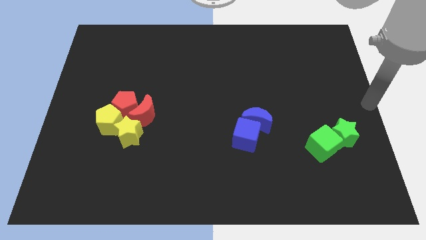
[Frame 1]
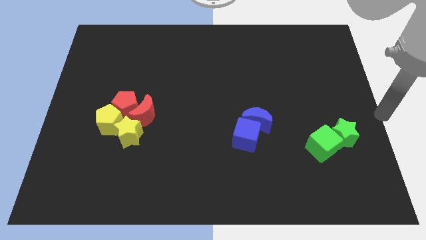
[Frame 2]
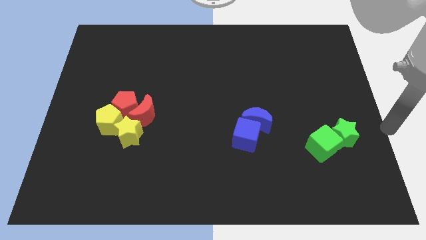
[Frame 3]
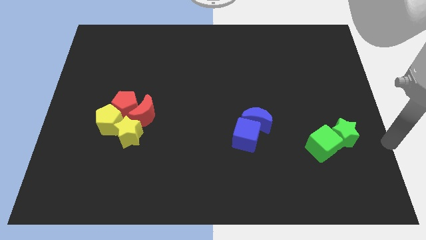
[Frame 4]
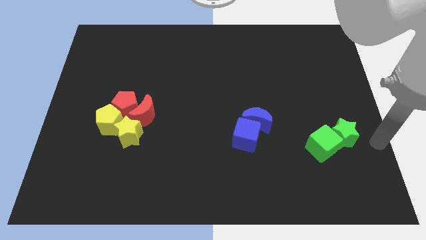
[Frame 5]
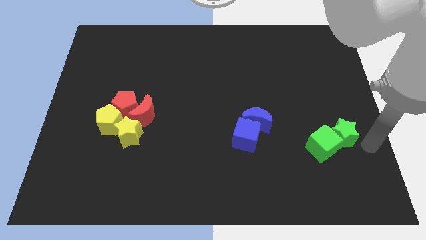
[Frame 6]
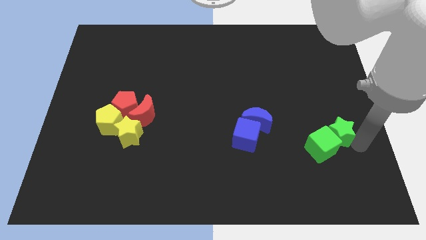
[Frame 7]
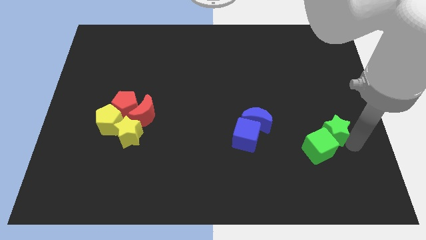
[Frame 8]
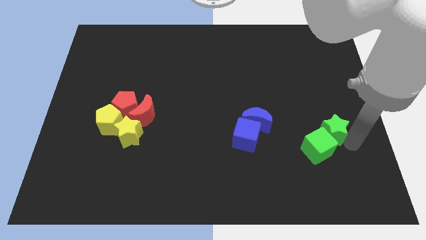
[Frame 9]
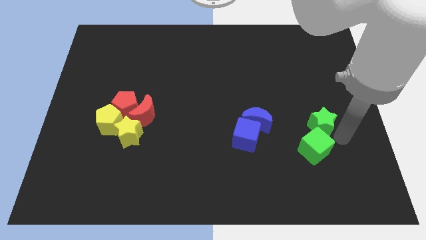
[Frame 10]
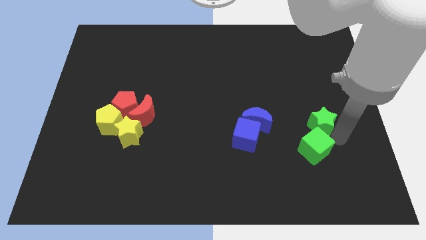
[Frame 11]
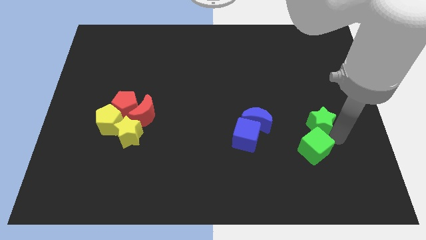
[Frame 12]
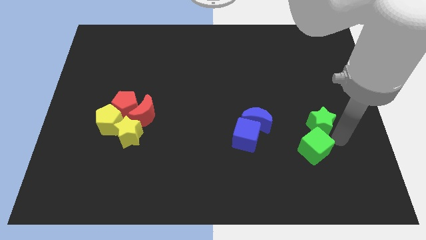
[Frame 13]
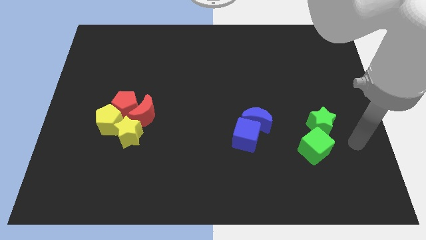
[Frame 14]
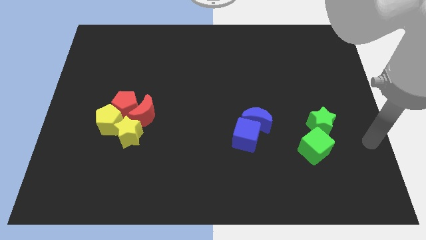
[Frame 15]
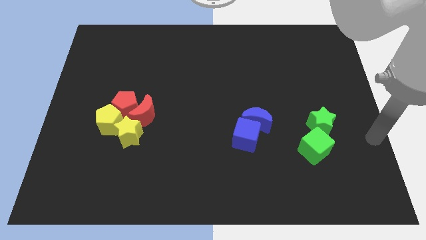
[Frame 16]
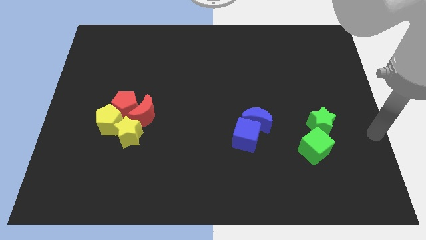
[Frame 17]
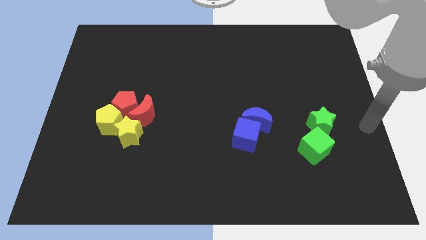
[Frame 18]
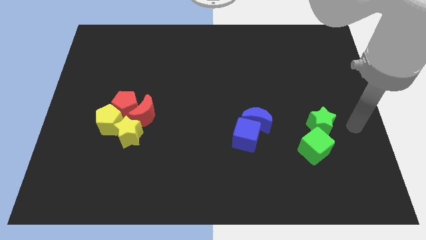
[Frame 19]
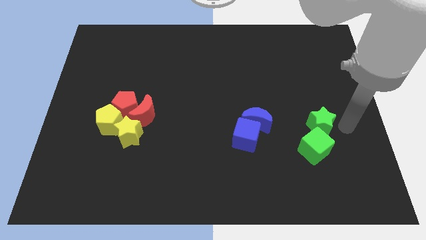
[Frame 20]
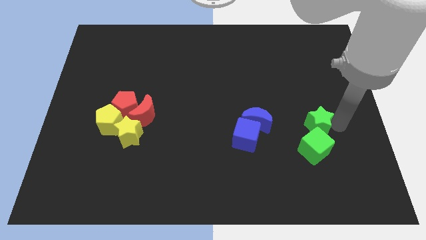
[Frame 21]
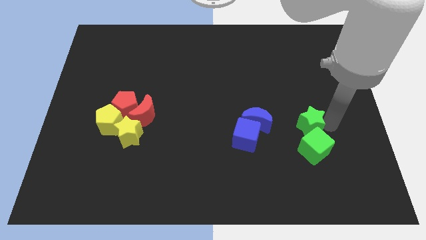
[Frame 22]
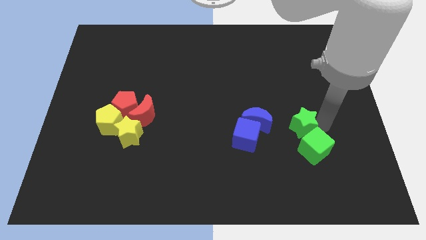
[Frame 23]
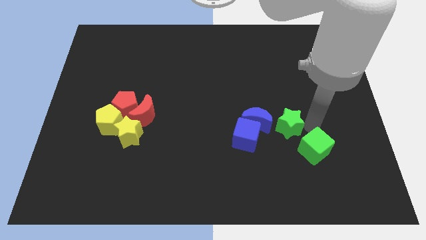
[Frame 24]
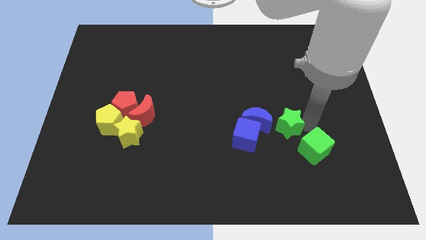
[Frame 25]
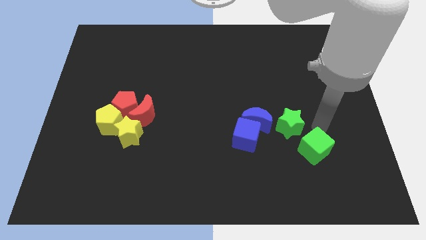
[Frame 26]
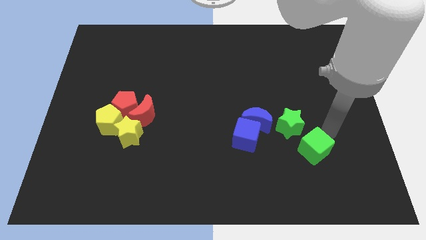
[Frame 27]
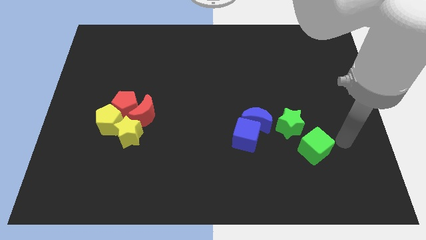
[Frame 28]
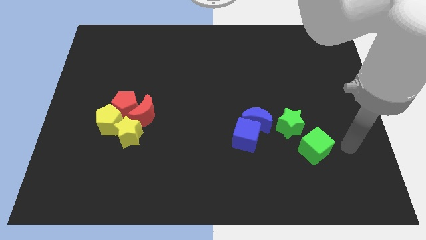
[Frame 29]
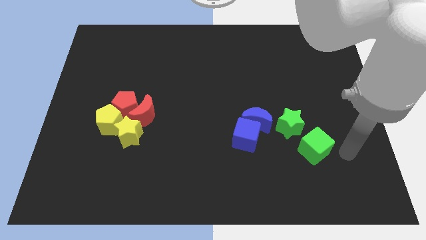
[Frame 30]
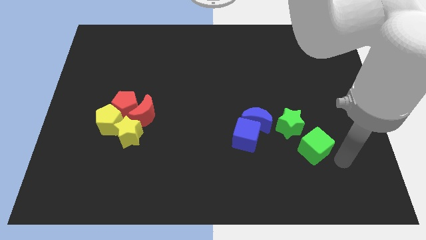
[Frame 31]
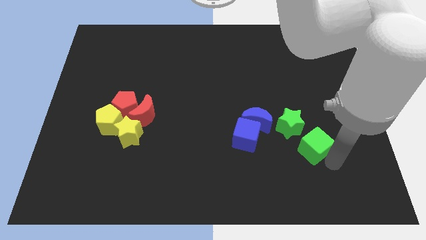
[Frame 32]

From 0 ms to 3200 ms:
move the green star to the right of the blue moon

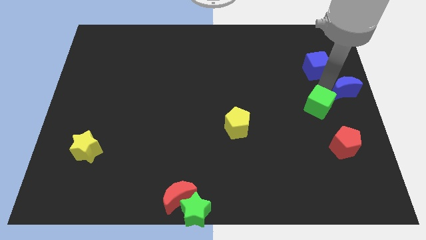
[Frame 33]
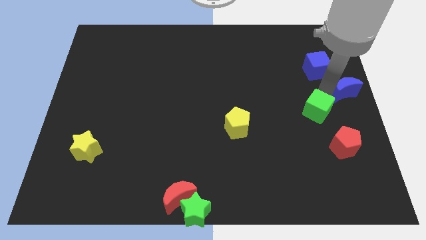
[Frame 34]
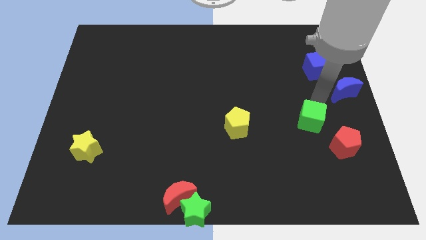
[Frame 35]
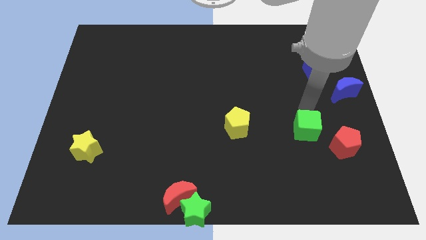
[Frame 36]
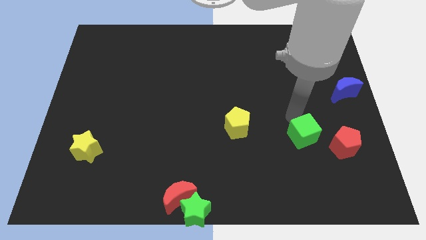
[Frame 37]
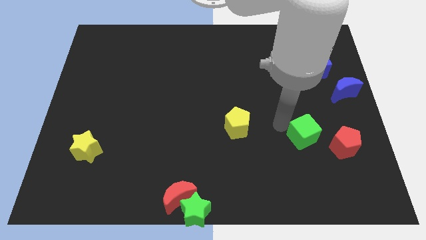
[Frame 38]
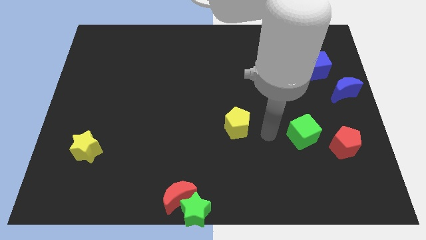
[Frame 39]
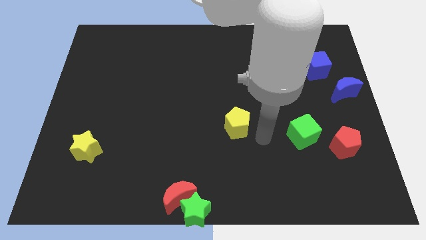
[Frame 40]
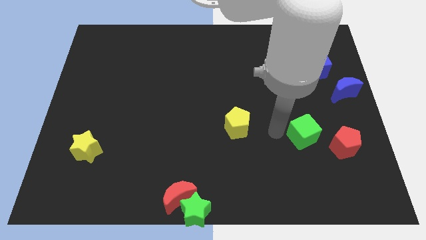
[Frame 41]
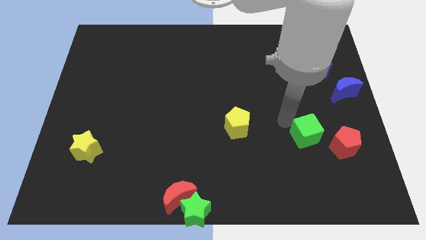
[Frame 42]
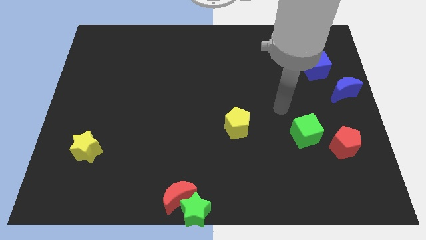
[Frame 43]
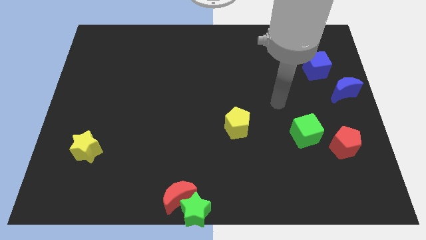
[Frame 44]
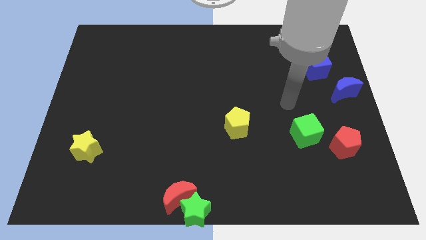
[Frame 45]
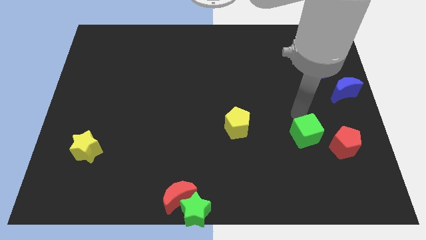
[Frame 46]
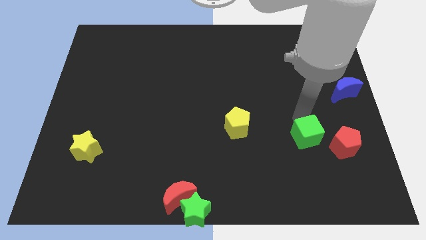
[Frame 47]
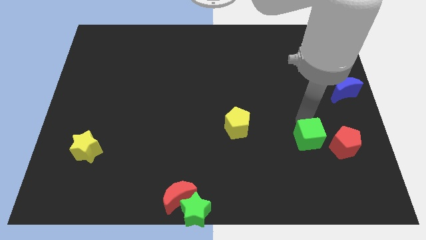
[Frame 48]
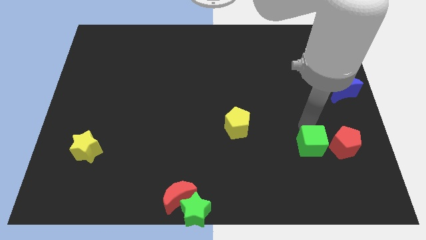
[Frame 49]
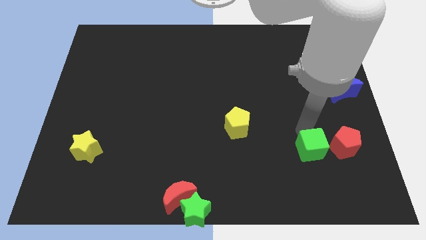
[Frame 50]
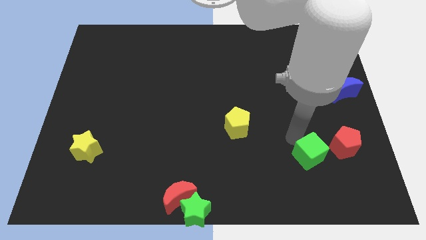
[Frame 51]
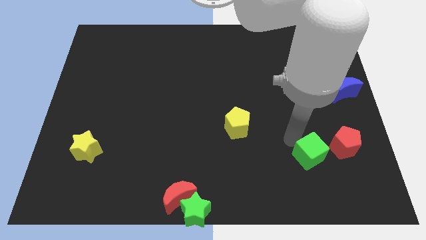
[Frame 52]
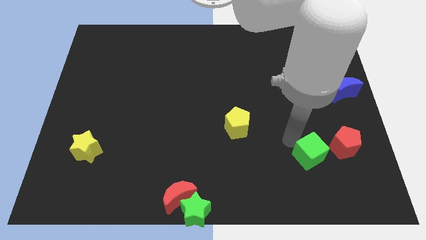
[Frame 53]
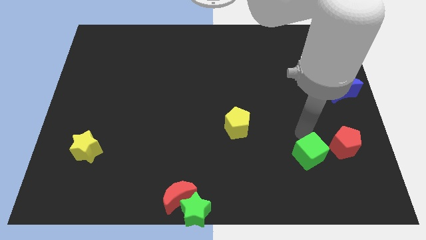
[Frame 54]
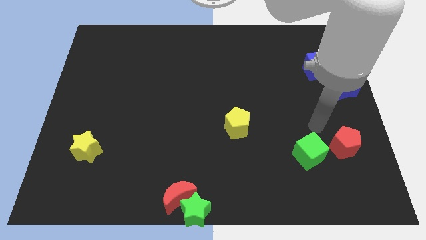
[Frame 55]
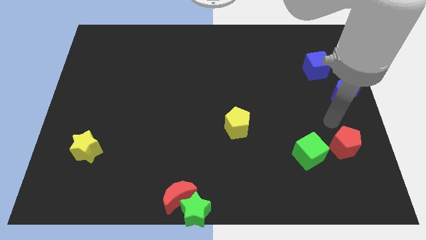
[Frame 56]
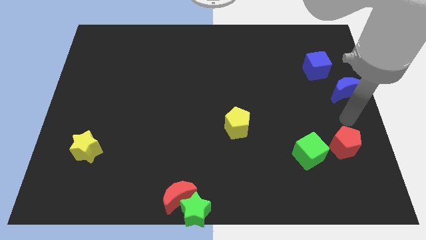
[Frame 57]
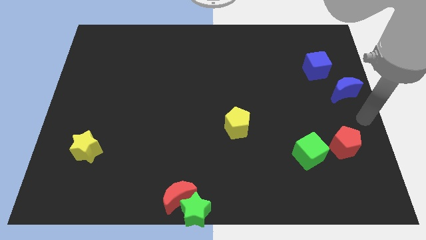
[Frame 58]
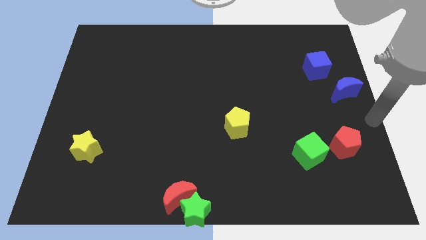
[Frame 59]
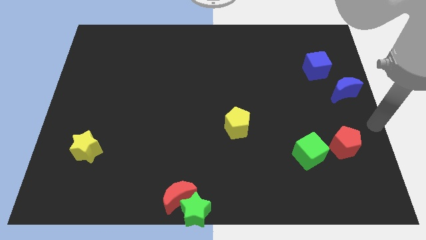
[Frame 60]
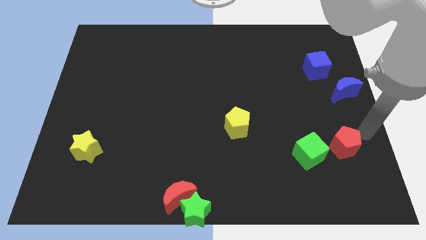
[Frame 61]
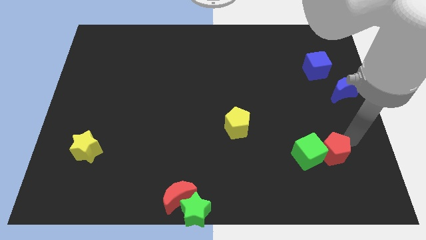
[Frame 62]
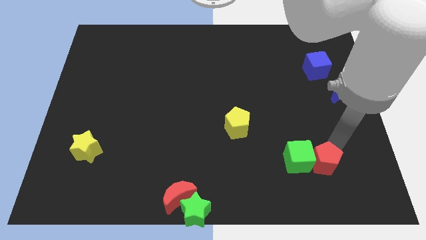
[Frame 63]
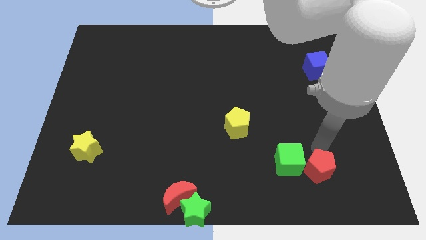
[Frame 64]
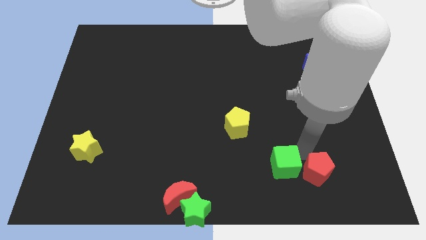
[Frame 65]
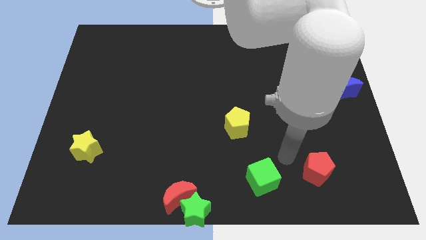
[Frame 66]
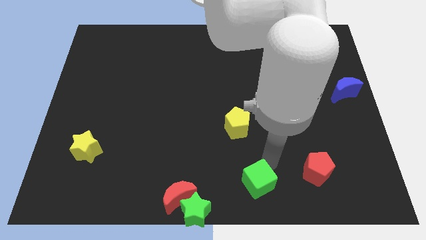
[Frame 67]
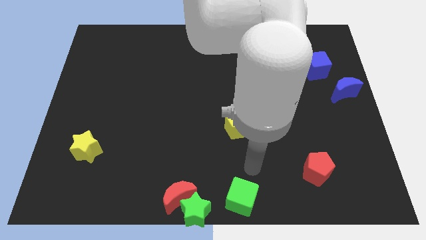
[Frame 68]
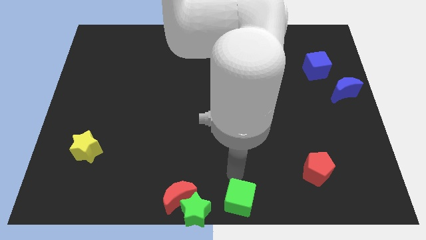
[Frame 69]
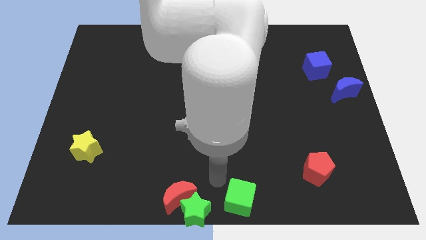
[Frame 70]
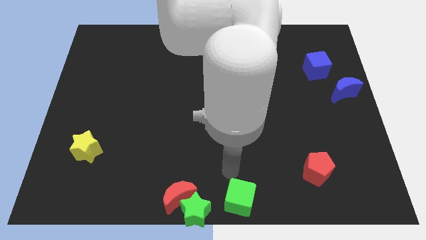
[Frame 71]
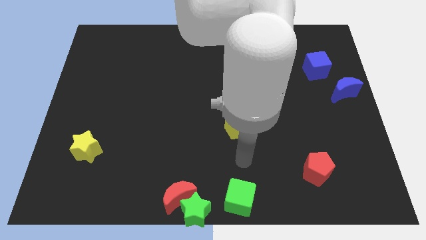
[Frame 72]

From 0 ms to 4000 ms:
place the green cube right to the red moon

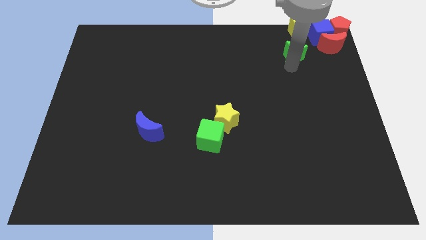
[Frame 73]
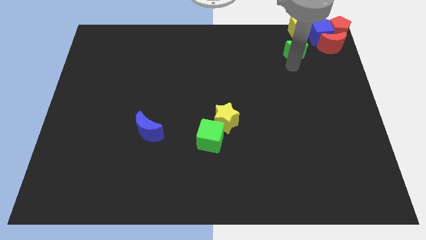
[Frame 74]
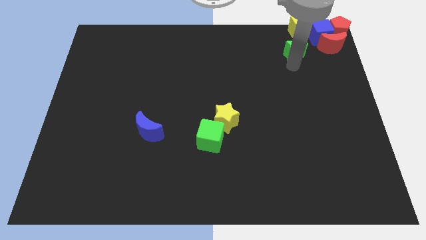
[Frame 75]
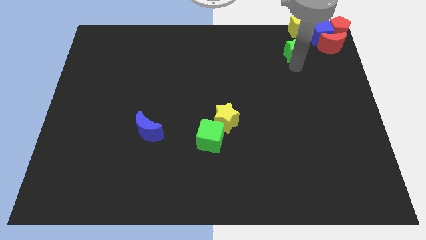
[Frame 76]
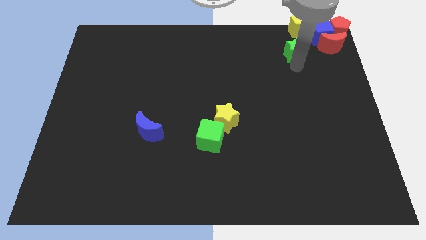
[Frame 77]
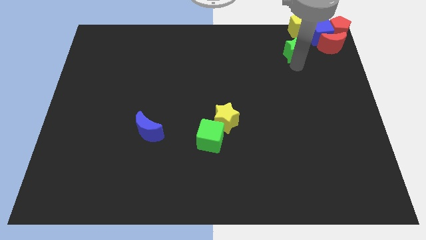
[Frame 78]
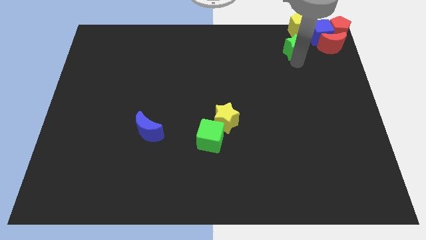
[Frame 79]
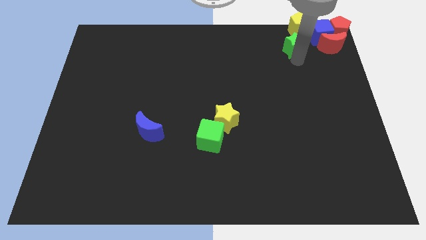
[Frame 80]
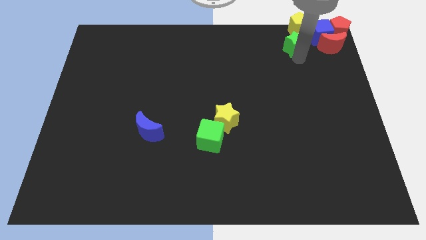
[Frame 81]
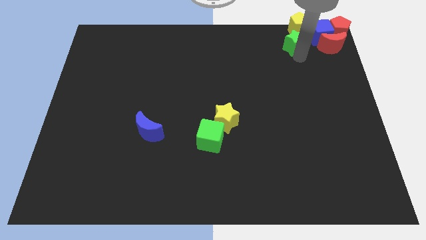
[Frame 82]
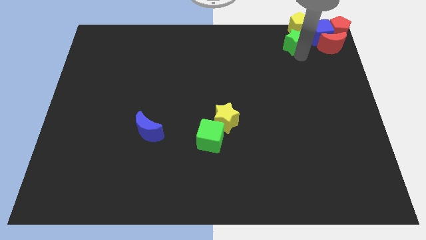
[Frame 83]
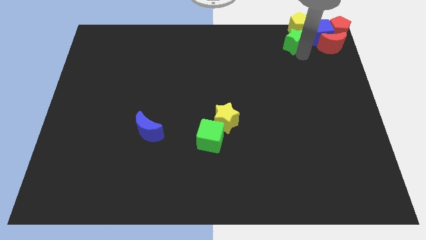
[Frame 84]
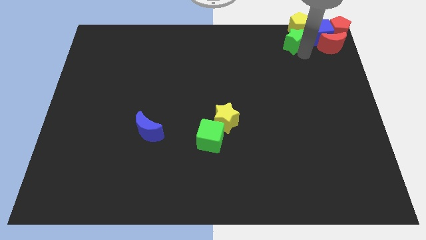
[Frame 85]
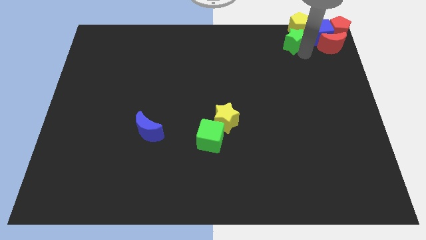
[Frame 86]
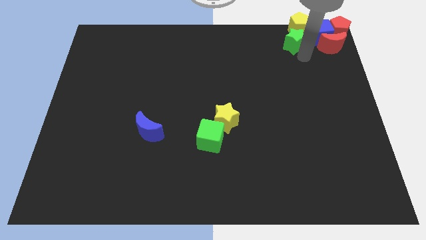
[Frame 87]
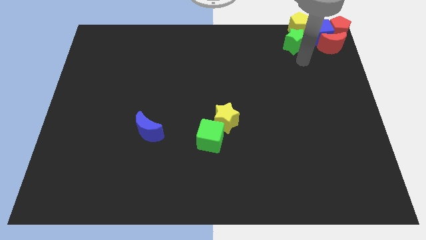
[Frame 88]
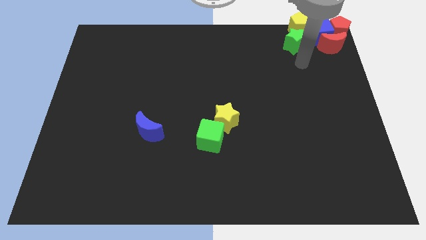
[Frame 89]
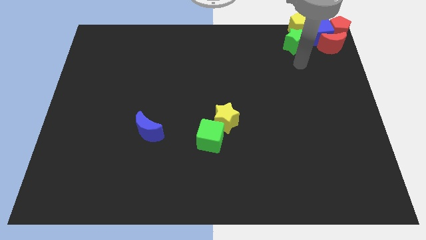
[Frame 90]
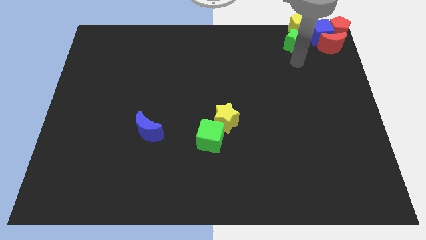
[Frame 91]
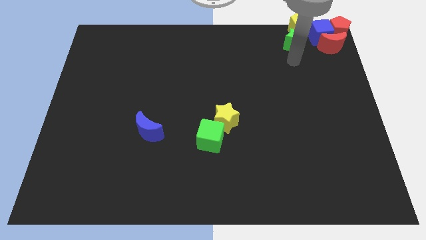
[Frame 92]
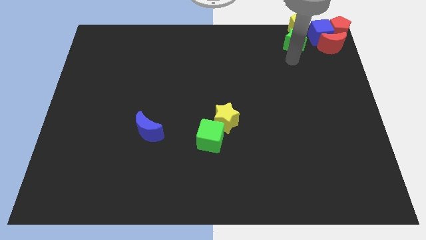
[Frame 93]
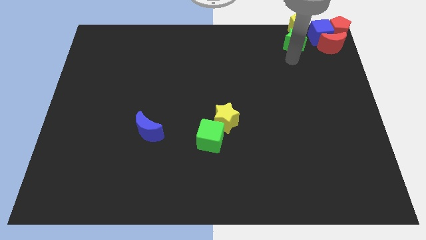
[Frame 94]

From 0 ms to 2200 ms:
move the green star below the yellow pentagon
